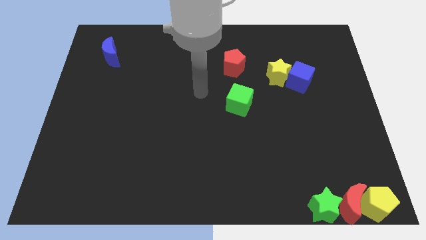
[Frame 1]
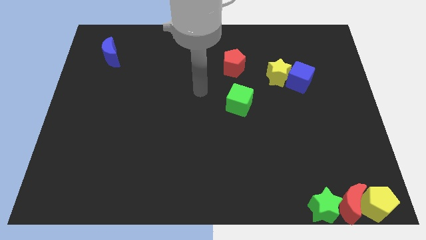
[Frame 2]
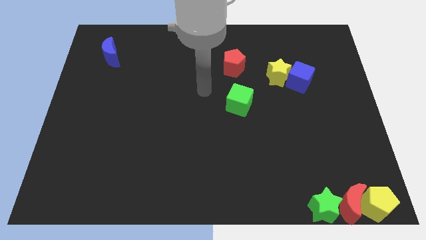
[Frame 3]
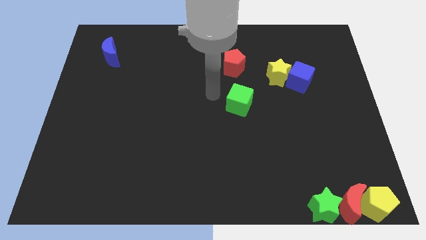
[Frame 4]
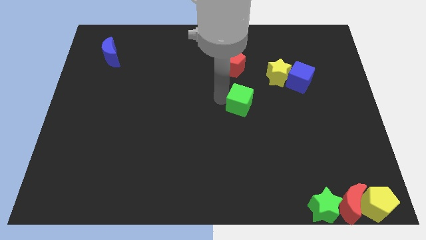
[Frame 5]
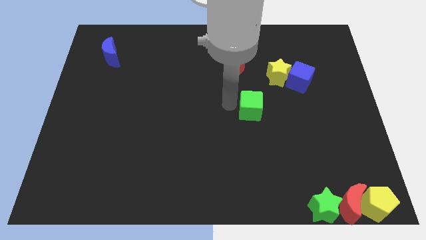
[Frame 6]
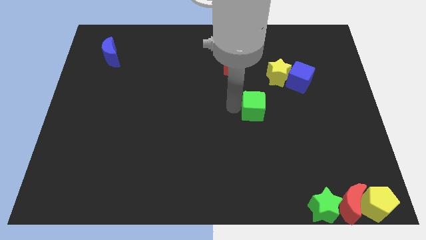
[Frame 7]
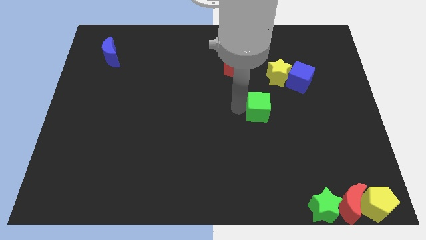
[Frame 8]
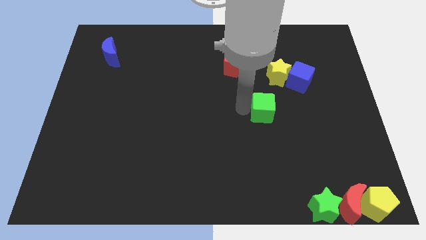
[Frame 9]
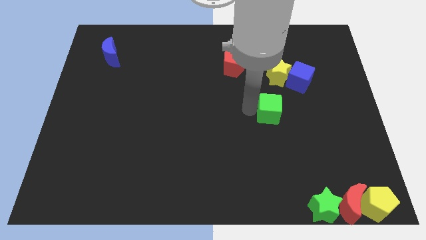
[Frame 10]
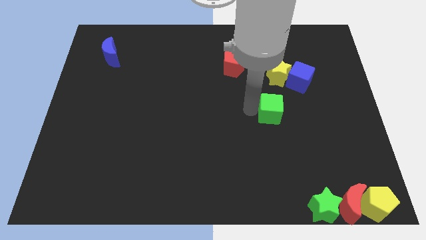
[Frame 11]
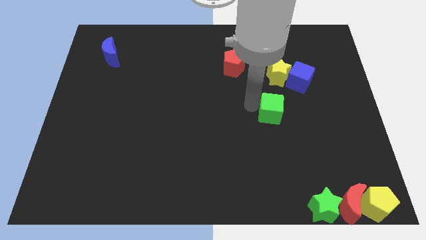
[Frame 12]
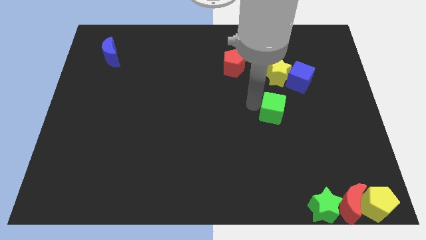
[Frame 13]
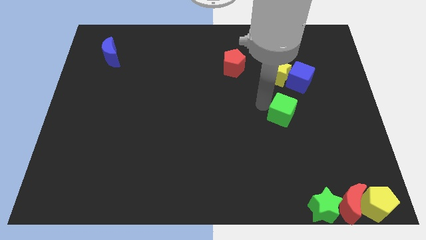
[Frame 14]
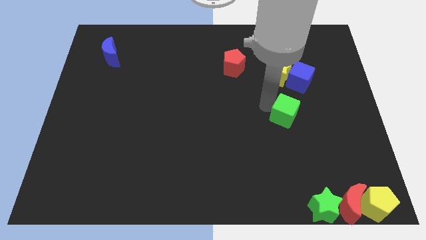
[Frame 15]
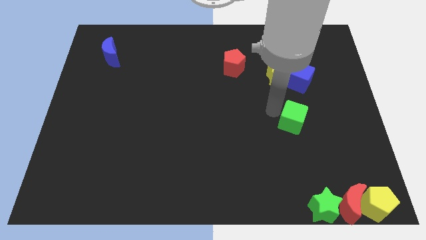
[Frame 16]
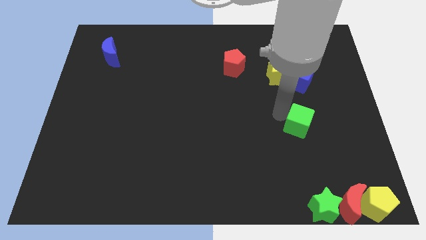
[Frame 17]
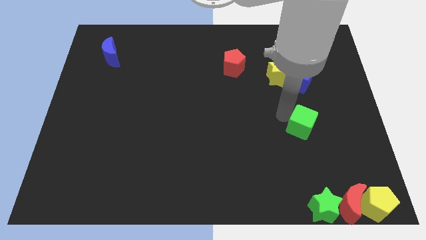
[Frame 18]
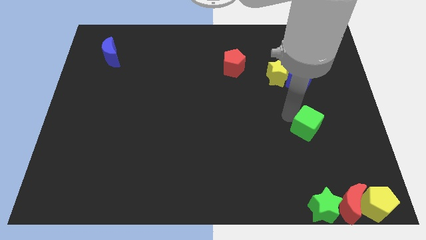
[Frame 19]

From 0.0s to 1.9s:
slide the green cube to the right

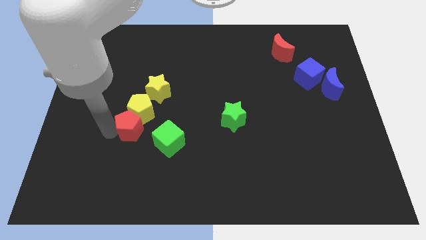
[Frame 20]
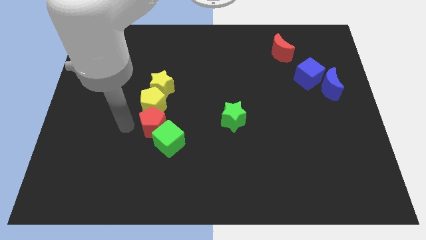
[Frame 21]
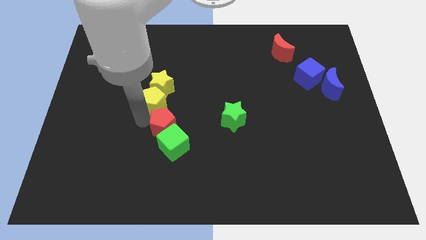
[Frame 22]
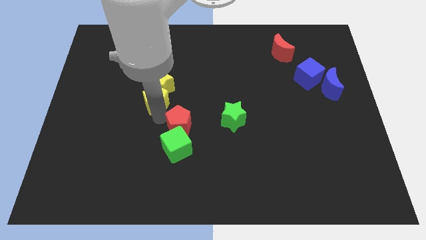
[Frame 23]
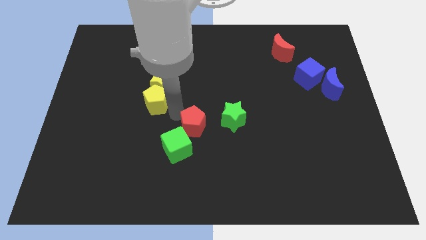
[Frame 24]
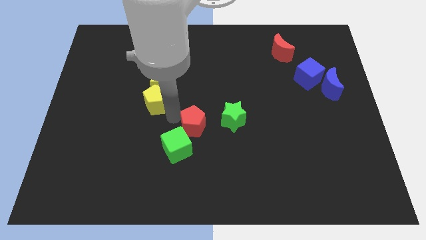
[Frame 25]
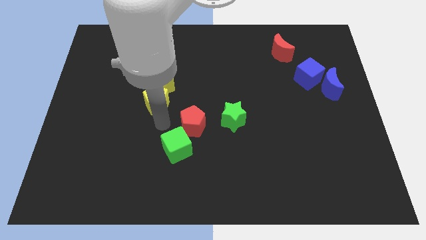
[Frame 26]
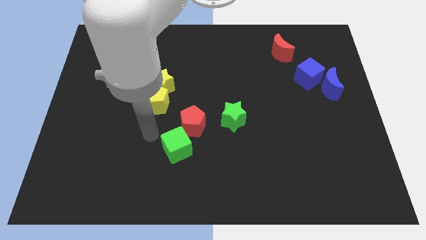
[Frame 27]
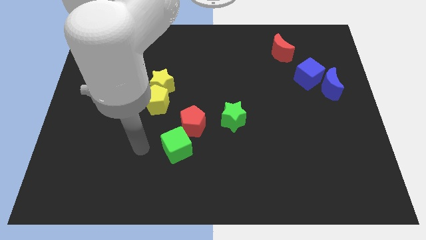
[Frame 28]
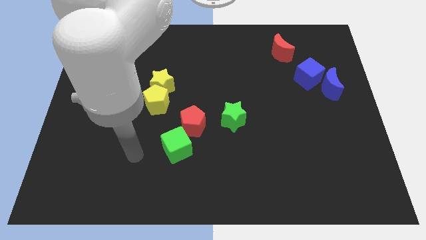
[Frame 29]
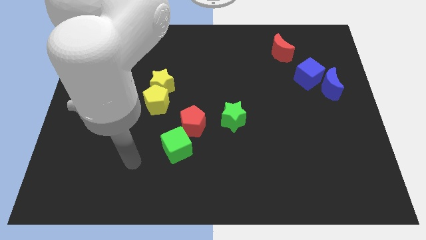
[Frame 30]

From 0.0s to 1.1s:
push red pentagon towards green star

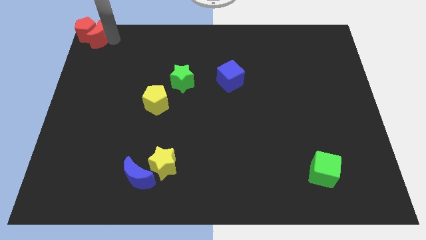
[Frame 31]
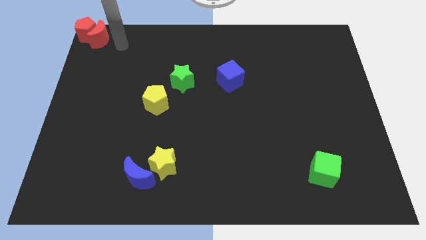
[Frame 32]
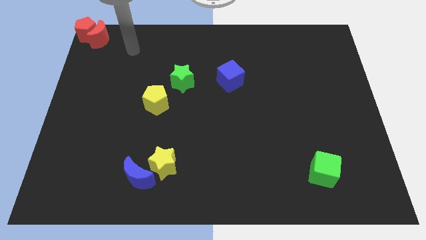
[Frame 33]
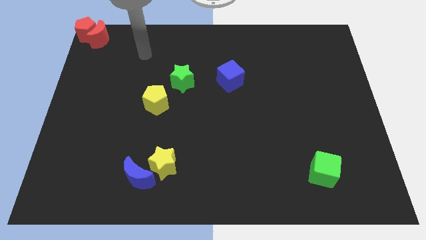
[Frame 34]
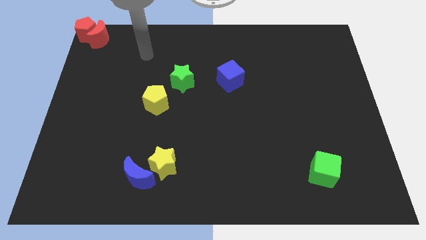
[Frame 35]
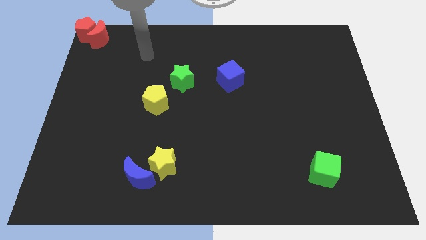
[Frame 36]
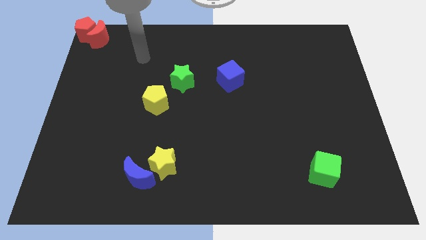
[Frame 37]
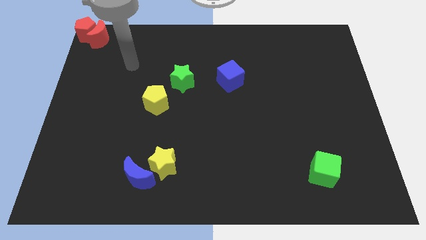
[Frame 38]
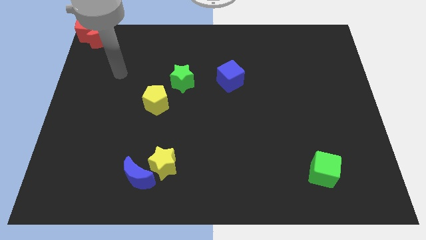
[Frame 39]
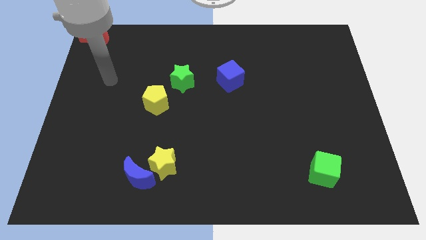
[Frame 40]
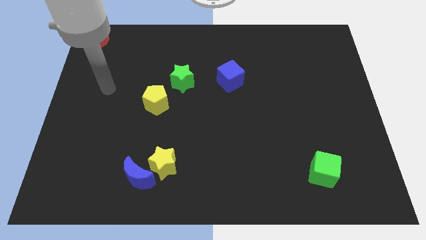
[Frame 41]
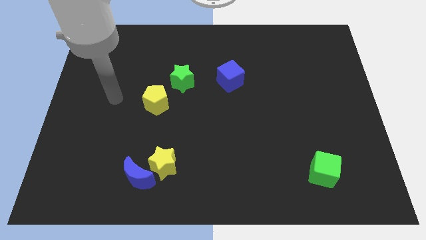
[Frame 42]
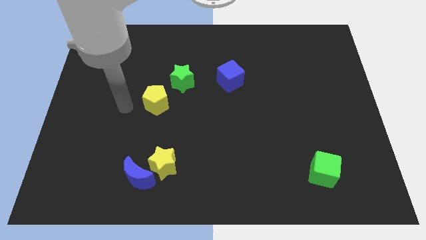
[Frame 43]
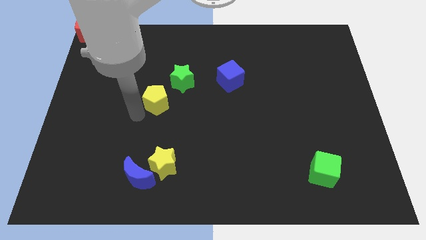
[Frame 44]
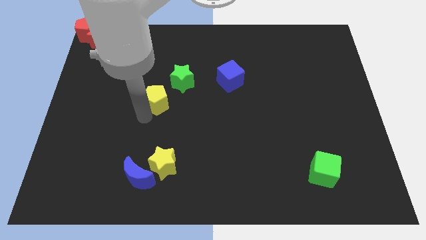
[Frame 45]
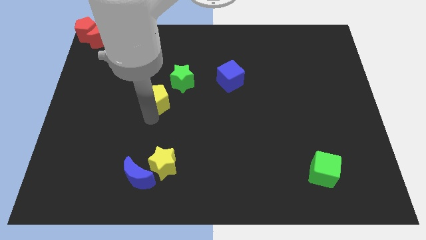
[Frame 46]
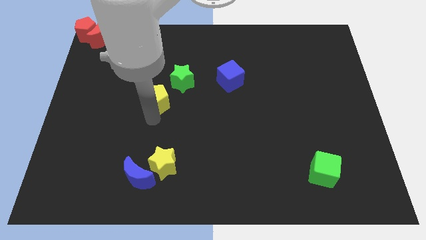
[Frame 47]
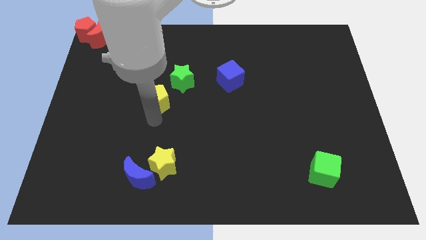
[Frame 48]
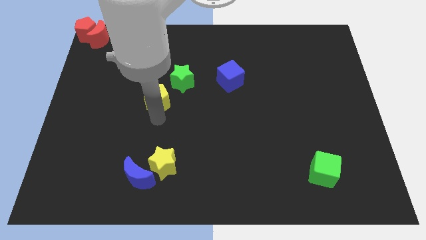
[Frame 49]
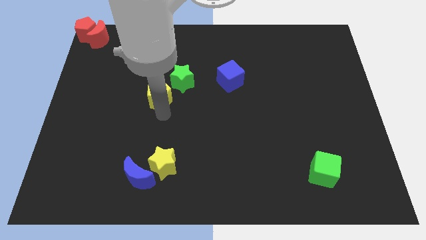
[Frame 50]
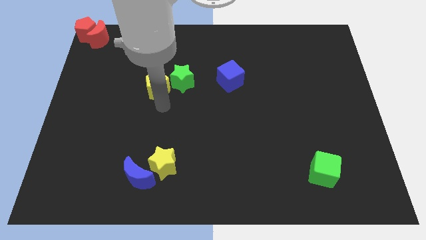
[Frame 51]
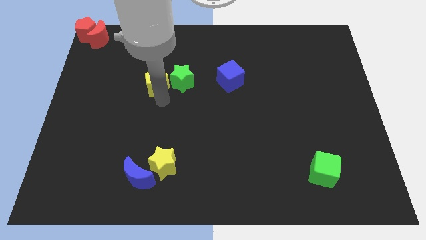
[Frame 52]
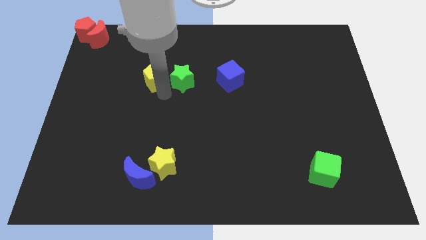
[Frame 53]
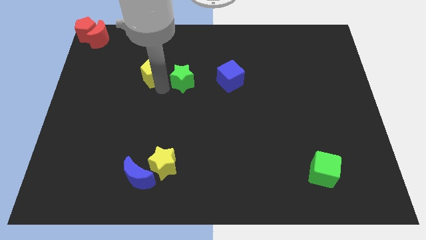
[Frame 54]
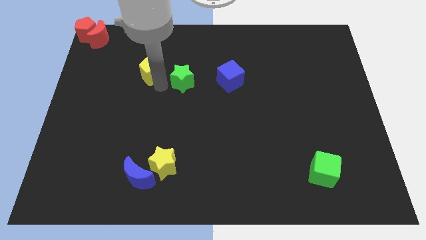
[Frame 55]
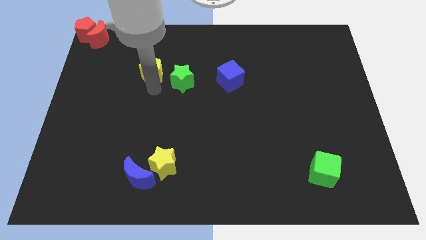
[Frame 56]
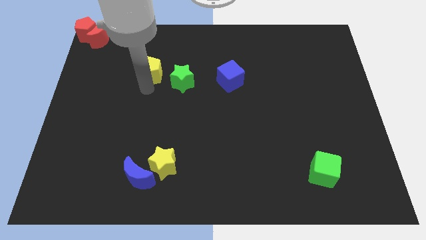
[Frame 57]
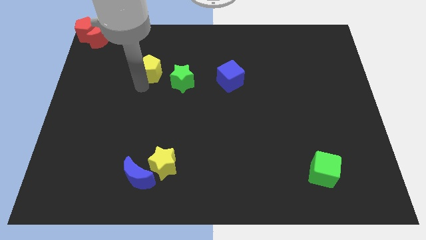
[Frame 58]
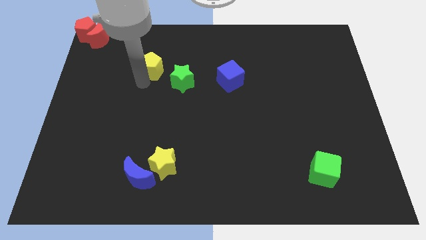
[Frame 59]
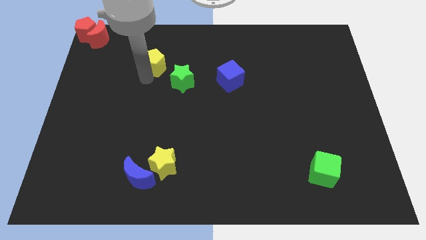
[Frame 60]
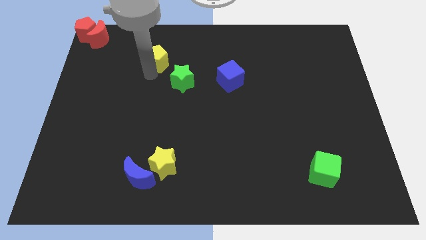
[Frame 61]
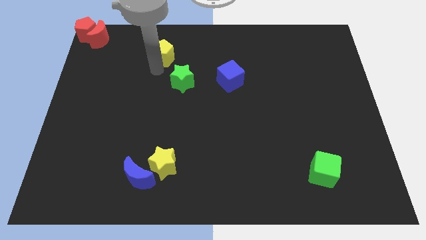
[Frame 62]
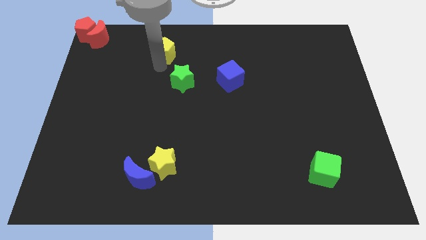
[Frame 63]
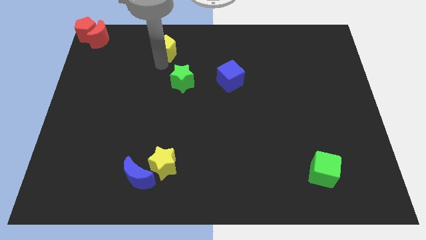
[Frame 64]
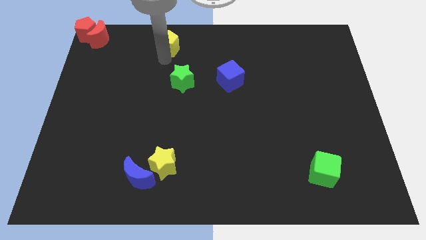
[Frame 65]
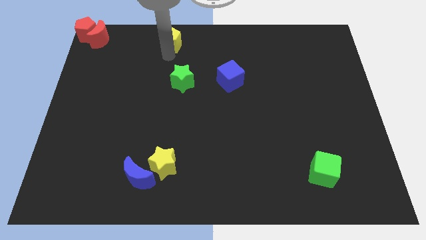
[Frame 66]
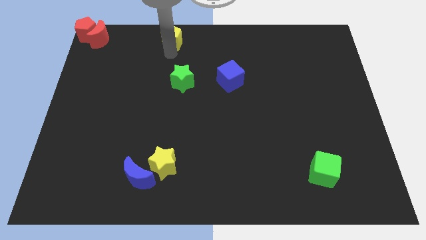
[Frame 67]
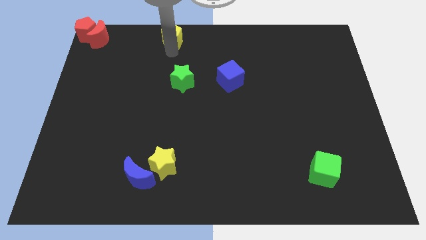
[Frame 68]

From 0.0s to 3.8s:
move the yellow pentagon diagonally top left to the green star

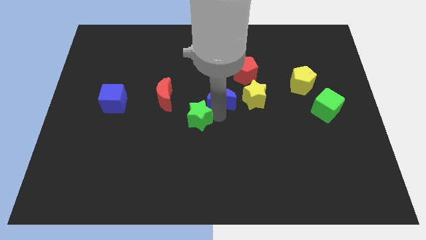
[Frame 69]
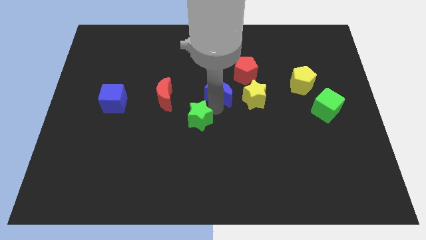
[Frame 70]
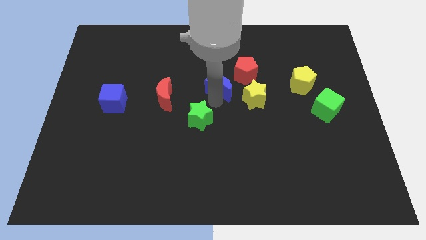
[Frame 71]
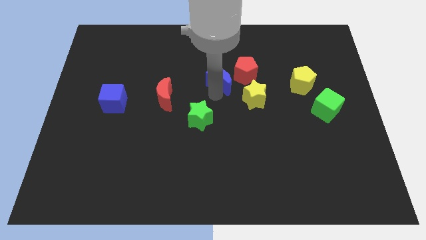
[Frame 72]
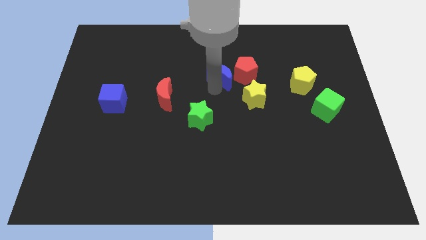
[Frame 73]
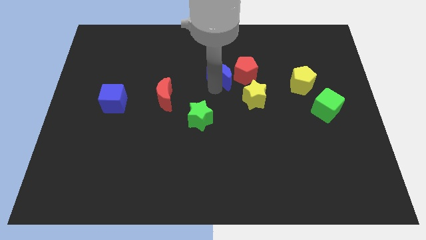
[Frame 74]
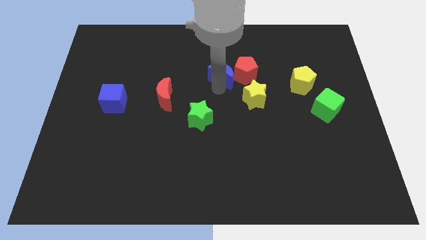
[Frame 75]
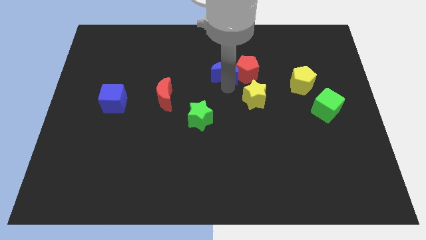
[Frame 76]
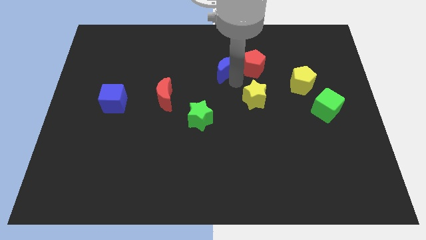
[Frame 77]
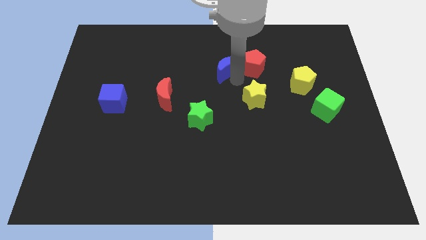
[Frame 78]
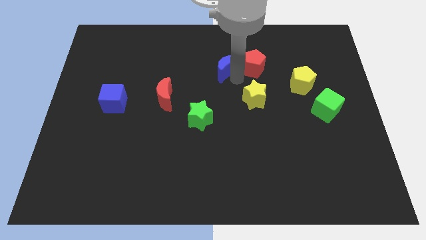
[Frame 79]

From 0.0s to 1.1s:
push blue crescent beside red pentagon

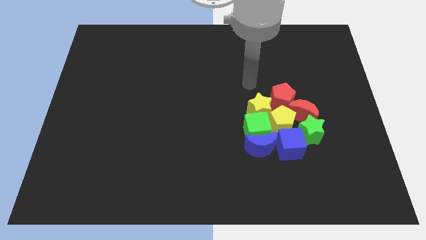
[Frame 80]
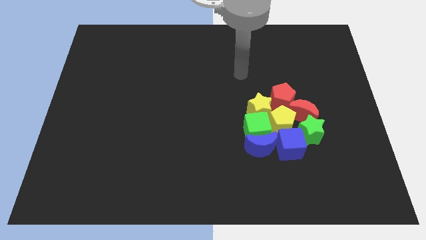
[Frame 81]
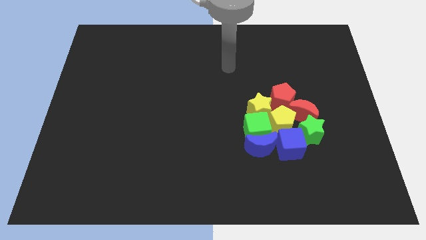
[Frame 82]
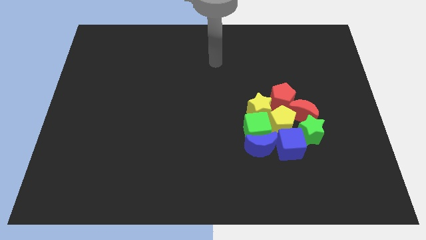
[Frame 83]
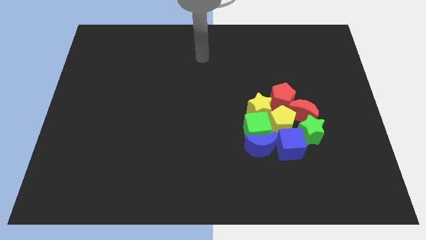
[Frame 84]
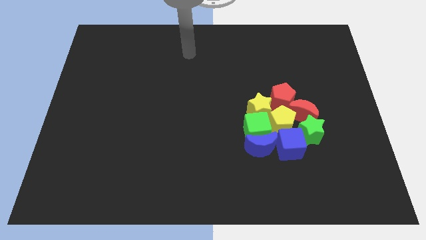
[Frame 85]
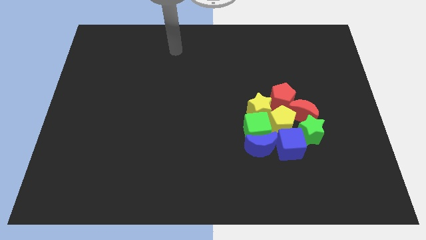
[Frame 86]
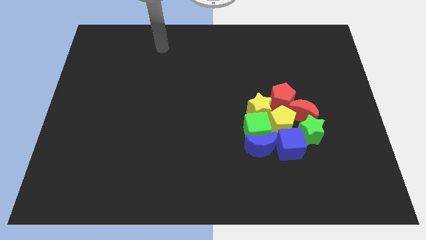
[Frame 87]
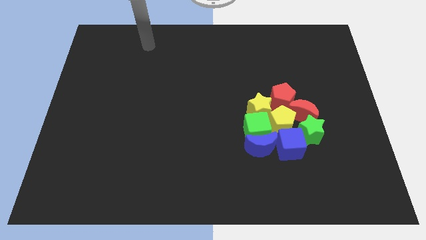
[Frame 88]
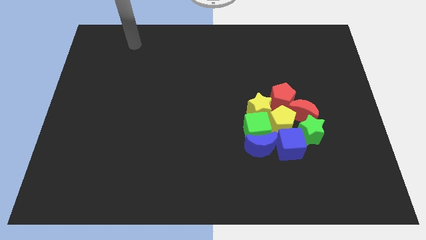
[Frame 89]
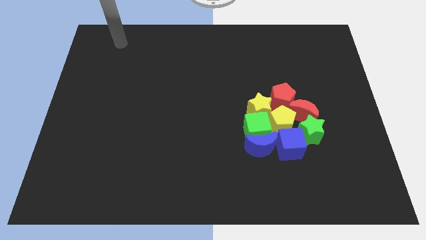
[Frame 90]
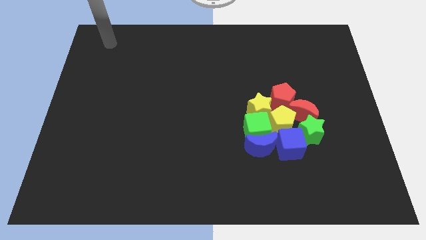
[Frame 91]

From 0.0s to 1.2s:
point your arm towards the top left side of the board
